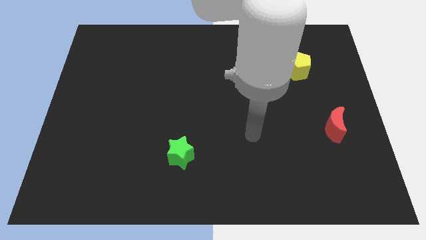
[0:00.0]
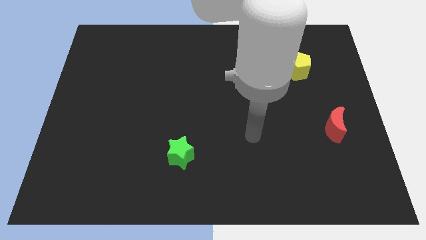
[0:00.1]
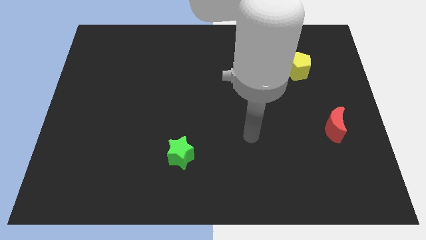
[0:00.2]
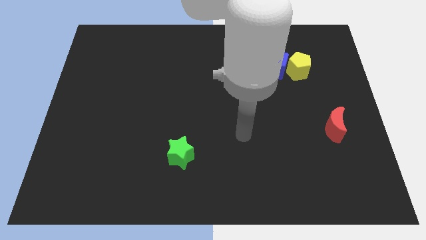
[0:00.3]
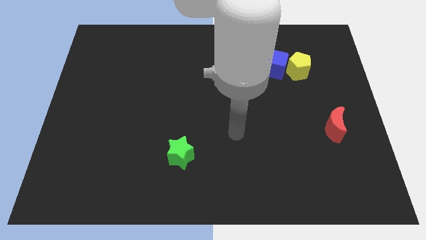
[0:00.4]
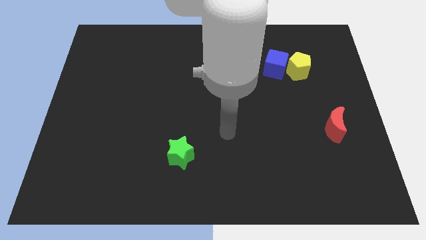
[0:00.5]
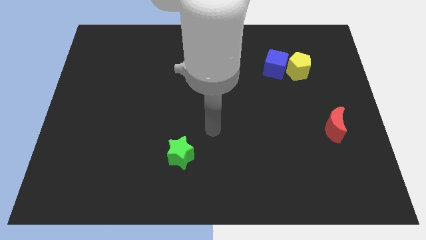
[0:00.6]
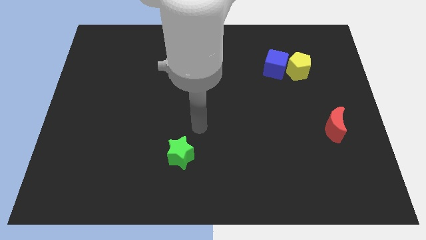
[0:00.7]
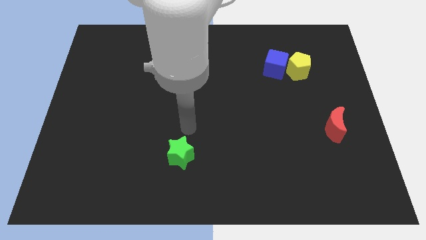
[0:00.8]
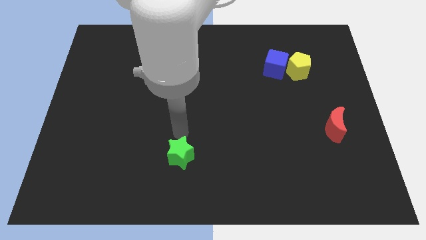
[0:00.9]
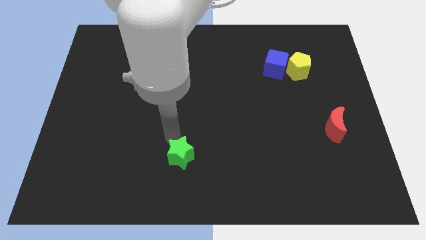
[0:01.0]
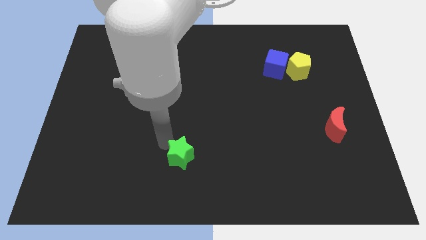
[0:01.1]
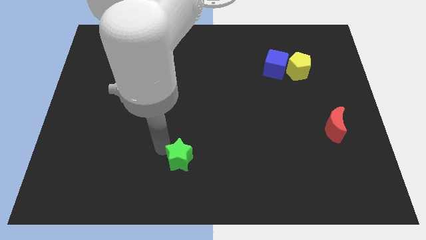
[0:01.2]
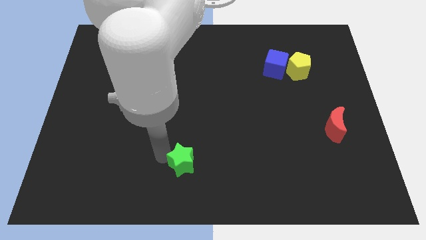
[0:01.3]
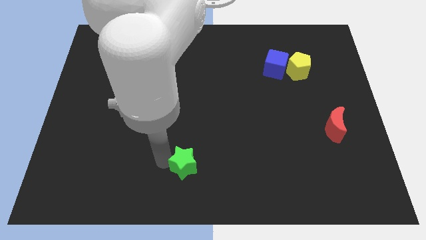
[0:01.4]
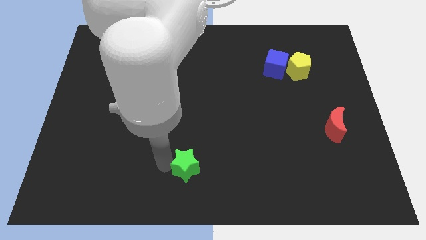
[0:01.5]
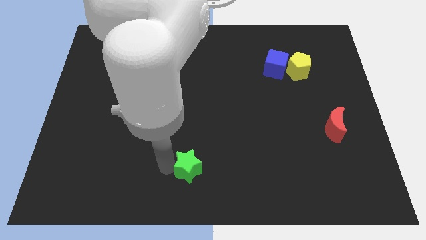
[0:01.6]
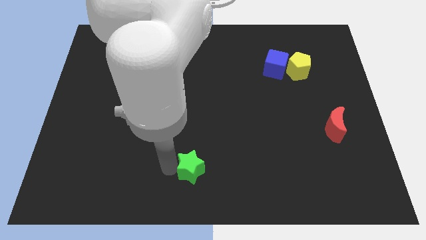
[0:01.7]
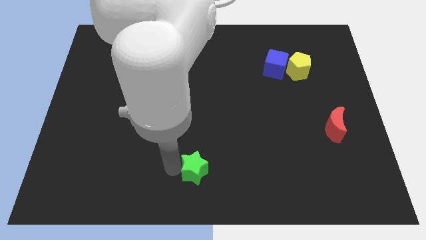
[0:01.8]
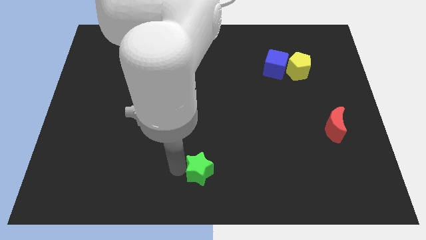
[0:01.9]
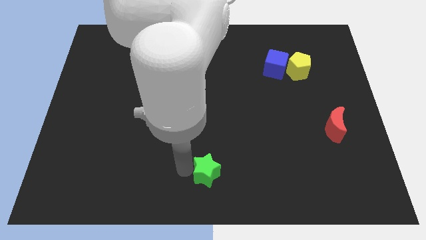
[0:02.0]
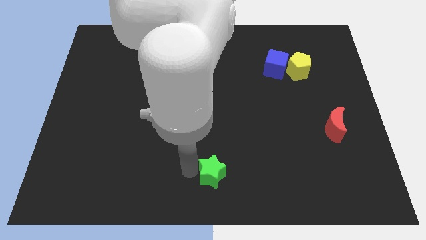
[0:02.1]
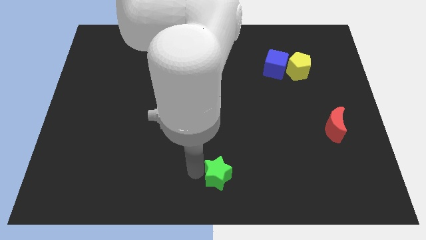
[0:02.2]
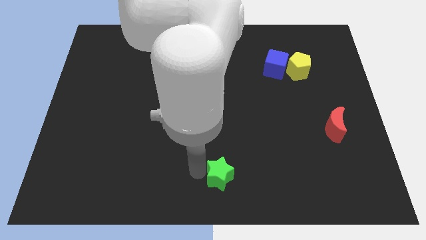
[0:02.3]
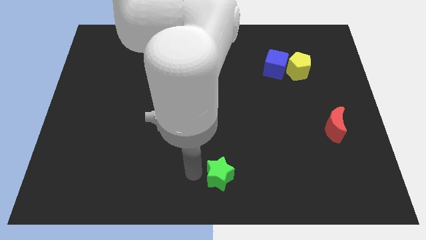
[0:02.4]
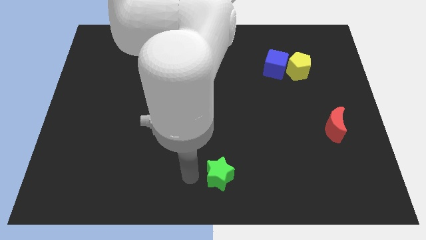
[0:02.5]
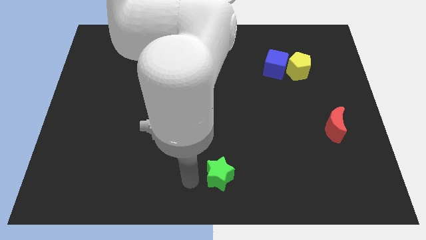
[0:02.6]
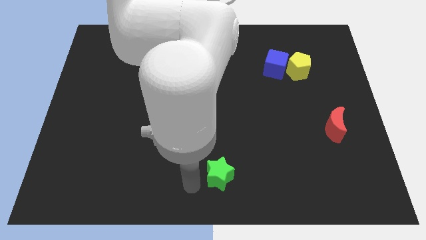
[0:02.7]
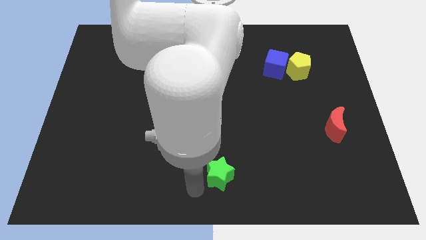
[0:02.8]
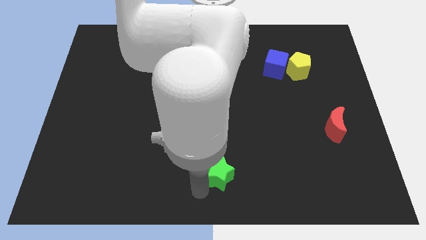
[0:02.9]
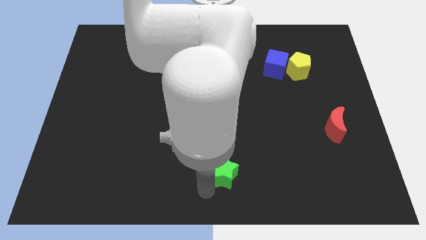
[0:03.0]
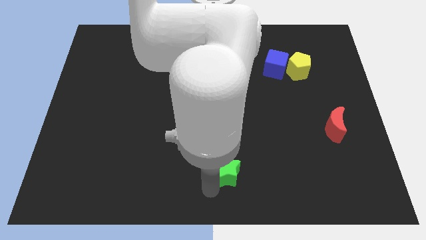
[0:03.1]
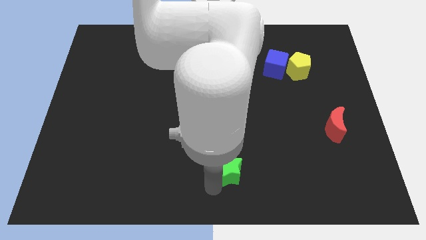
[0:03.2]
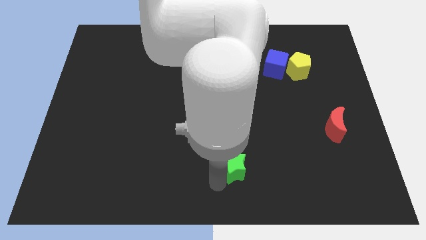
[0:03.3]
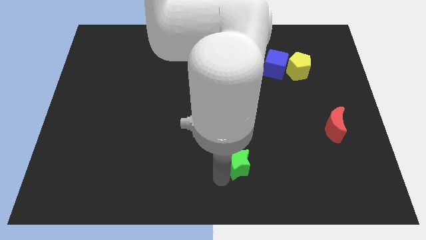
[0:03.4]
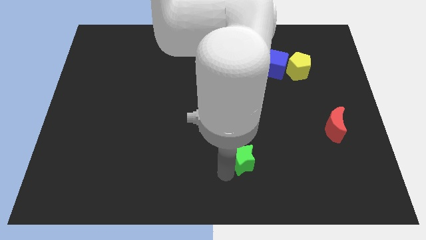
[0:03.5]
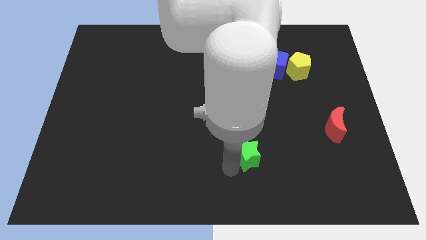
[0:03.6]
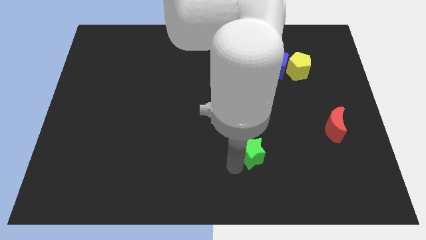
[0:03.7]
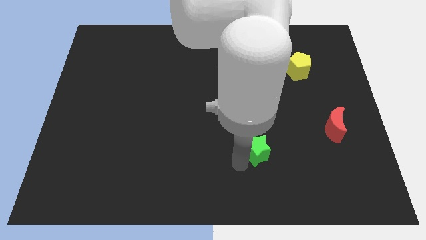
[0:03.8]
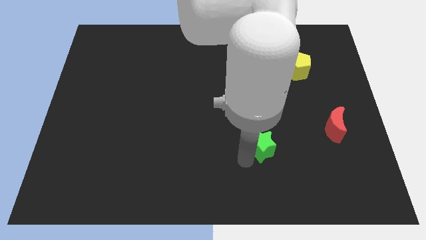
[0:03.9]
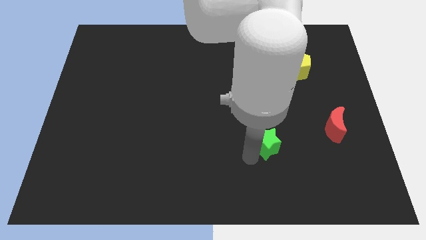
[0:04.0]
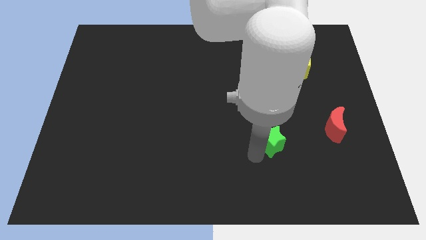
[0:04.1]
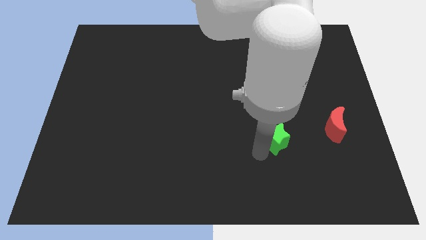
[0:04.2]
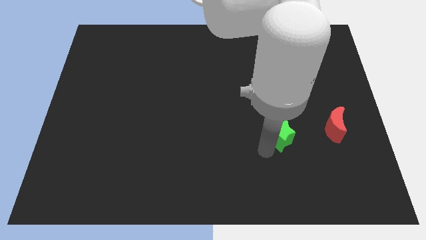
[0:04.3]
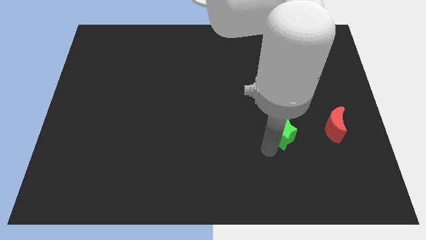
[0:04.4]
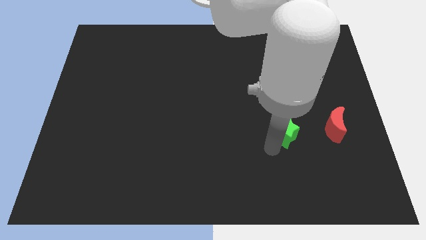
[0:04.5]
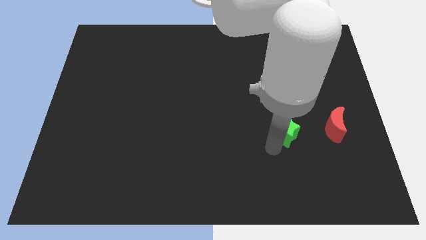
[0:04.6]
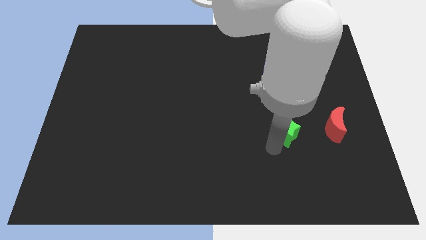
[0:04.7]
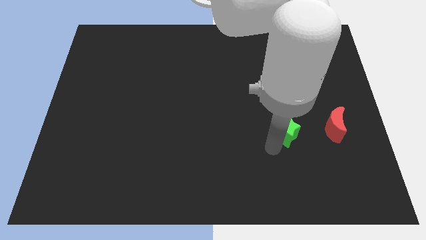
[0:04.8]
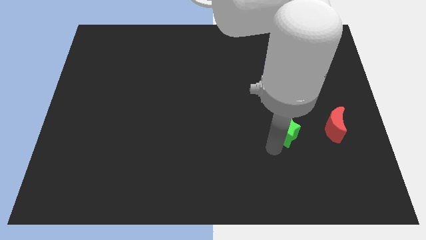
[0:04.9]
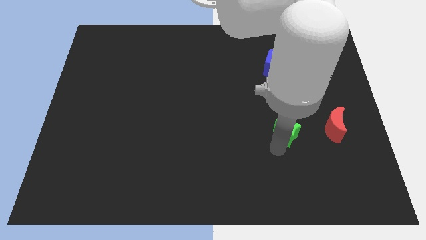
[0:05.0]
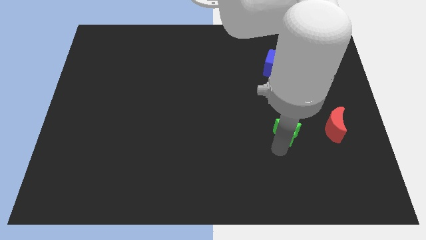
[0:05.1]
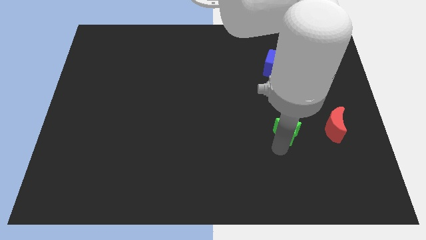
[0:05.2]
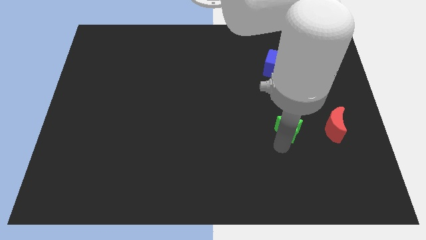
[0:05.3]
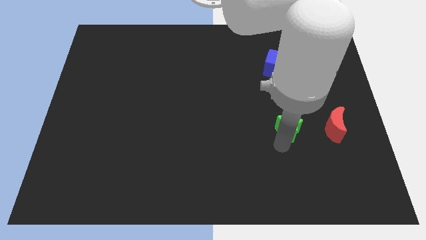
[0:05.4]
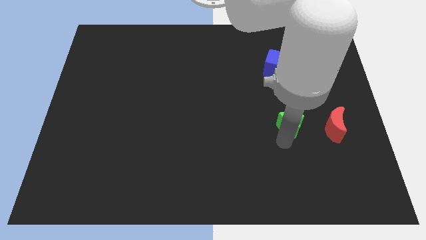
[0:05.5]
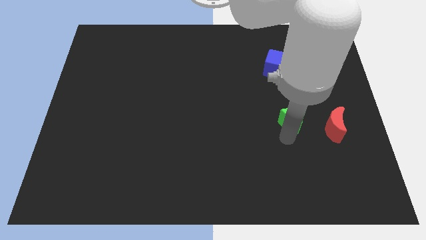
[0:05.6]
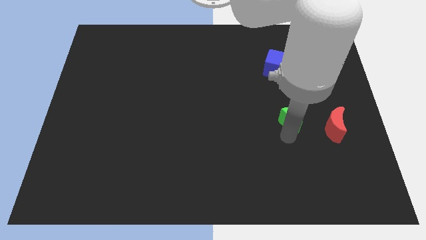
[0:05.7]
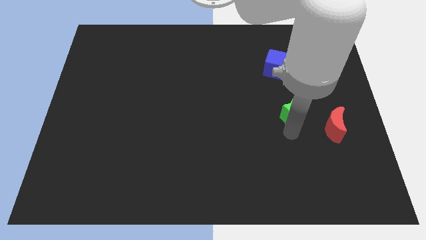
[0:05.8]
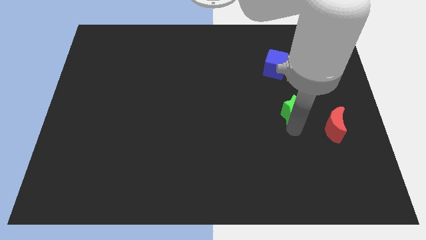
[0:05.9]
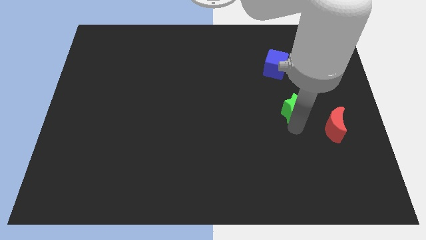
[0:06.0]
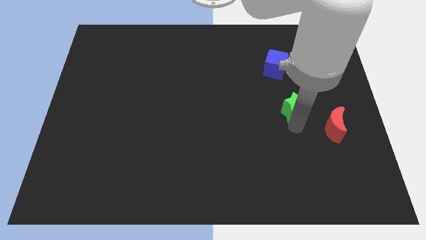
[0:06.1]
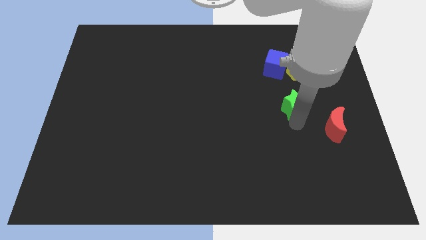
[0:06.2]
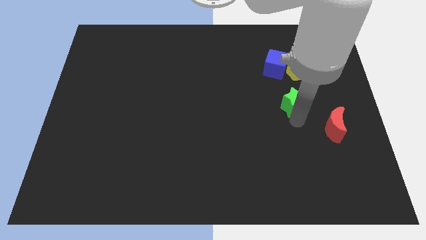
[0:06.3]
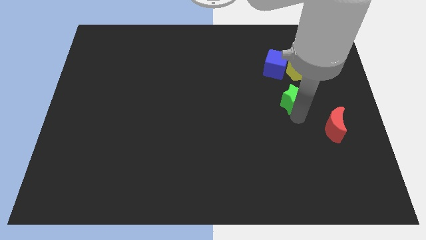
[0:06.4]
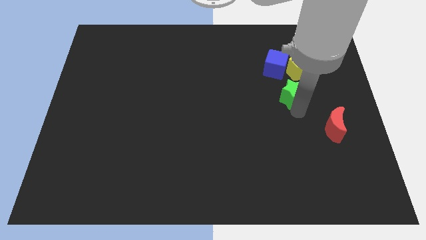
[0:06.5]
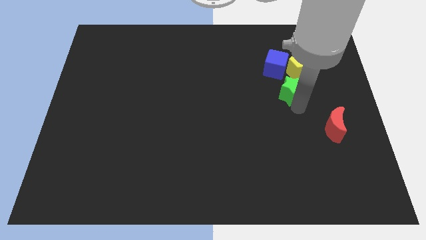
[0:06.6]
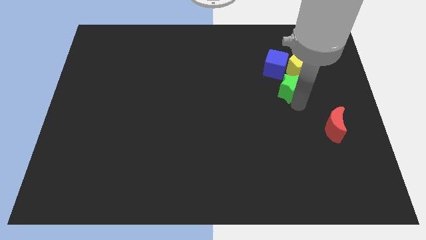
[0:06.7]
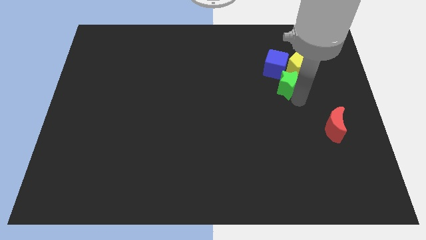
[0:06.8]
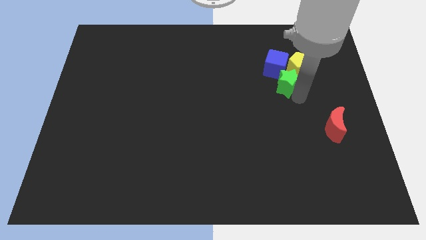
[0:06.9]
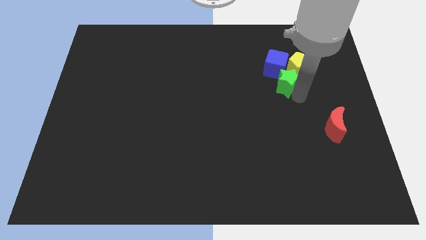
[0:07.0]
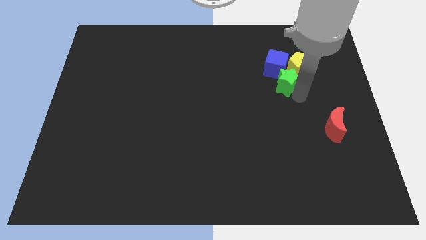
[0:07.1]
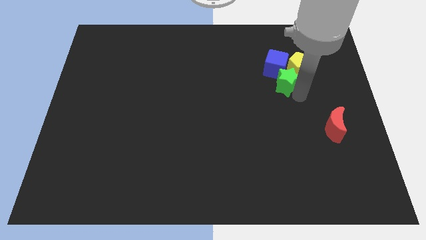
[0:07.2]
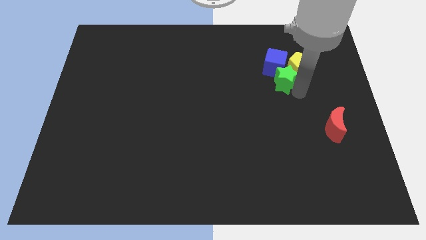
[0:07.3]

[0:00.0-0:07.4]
put the green block towards the yellow block

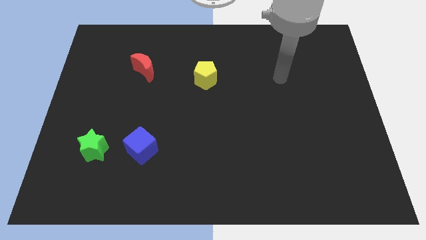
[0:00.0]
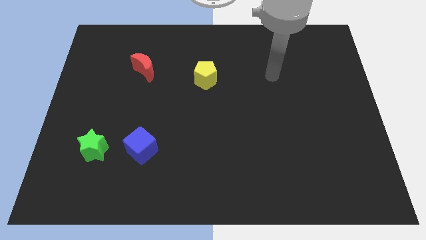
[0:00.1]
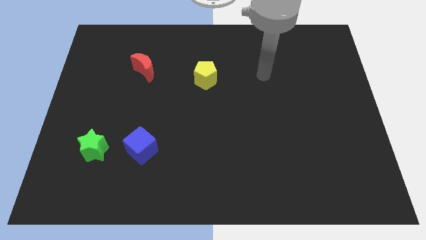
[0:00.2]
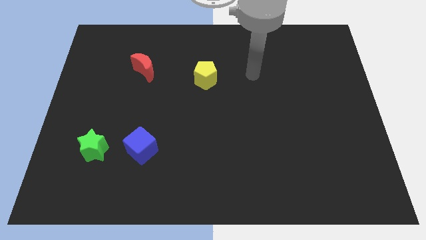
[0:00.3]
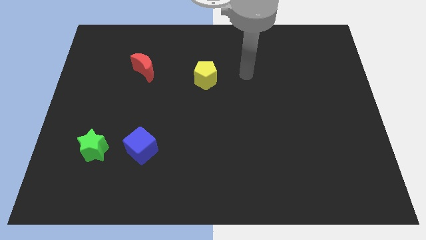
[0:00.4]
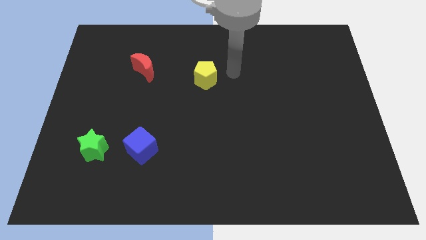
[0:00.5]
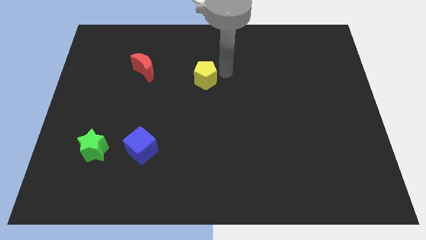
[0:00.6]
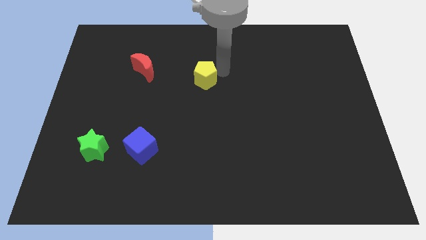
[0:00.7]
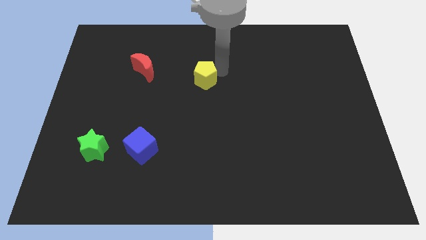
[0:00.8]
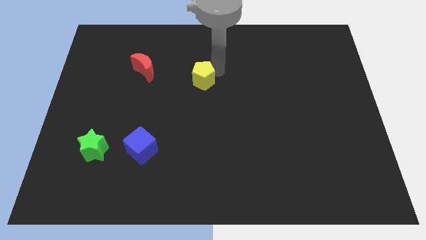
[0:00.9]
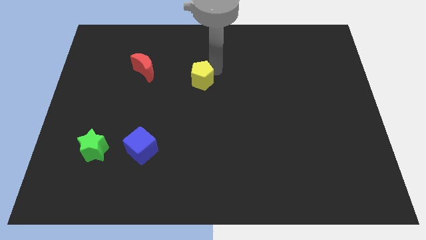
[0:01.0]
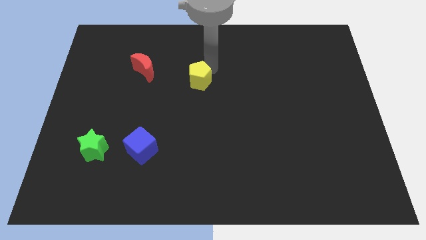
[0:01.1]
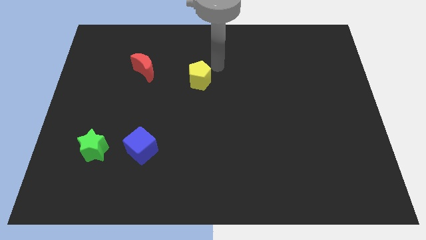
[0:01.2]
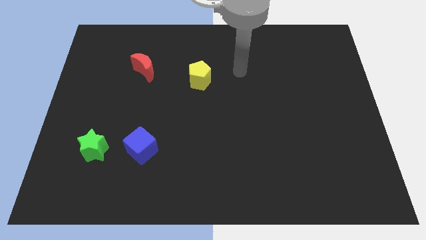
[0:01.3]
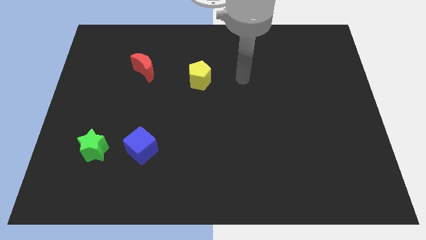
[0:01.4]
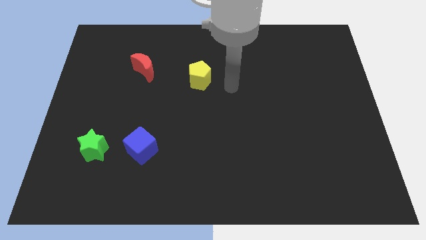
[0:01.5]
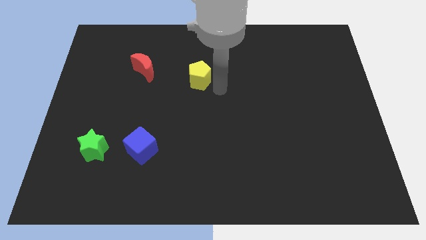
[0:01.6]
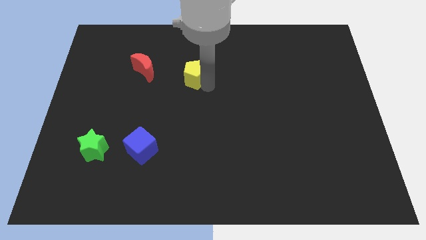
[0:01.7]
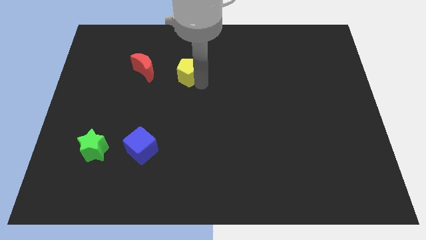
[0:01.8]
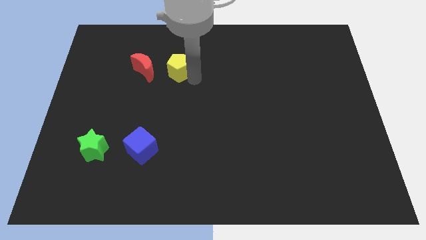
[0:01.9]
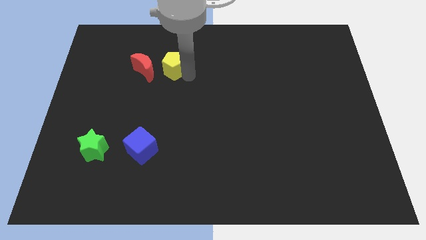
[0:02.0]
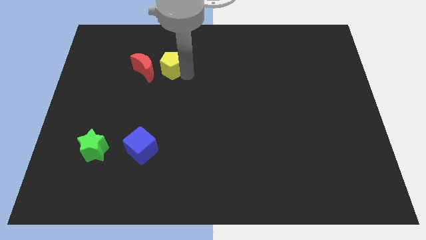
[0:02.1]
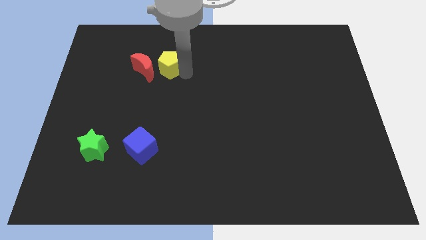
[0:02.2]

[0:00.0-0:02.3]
put the pentagon close to the red block
